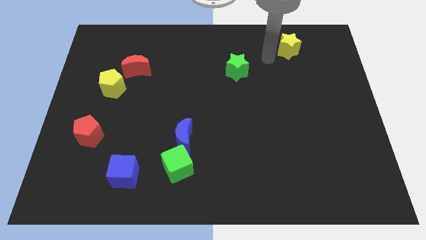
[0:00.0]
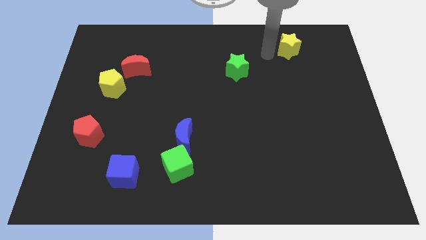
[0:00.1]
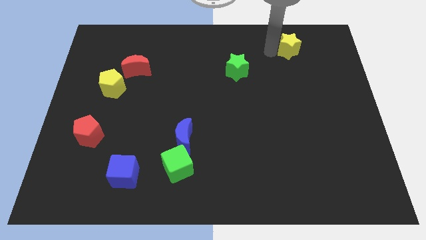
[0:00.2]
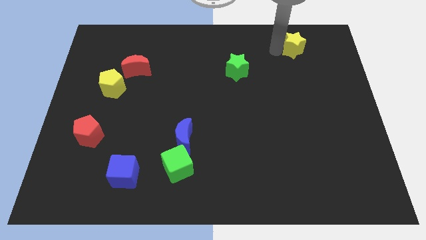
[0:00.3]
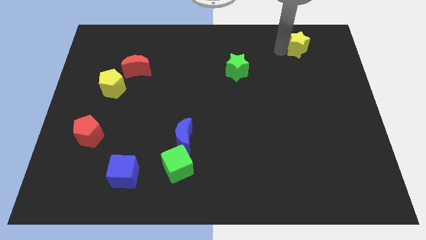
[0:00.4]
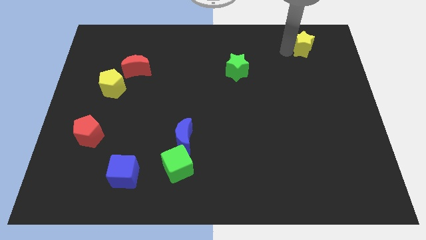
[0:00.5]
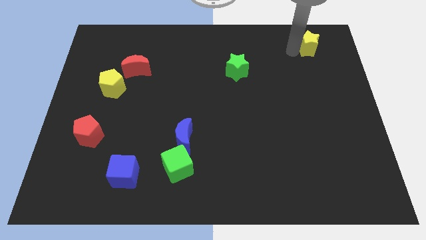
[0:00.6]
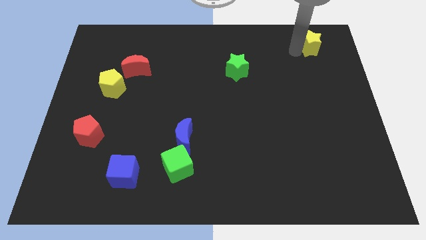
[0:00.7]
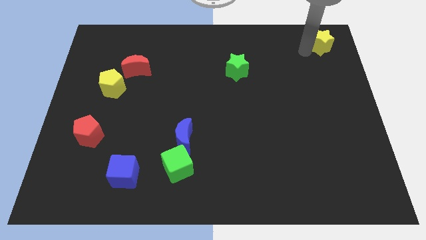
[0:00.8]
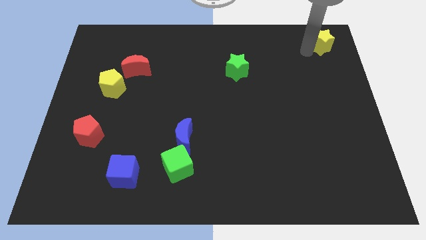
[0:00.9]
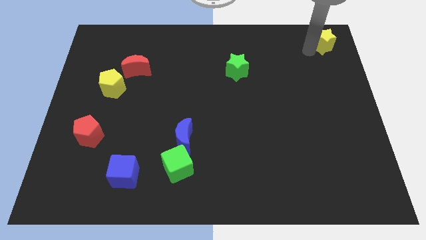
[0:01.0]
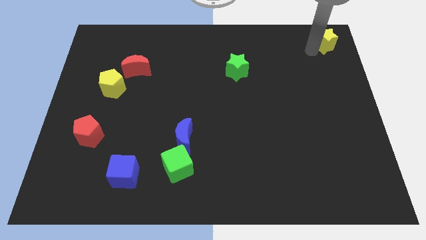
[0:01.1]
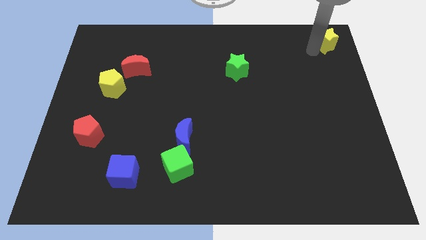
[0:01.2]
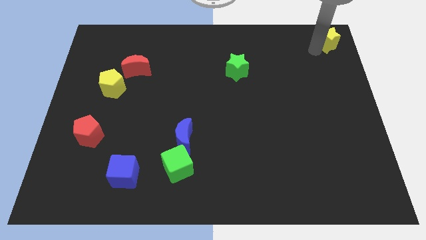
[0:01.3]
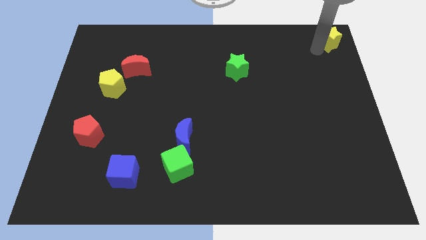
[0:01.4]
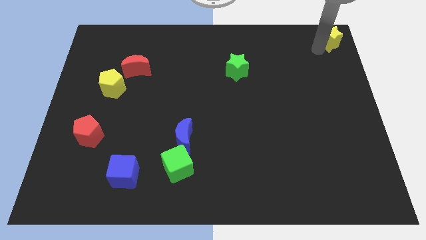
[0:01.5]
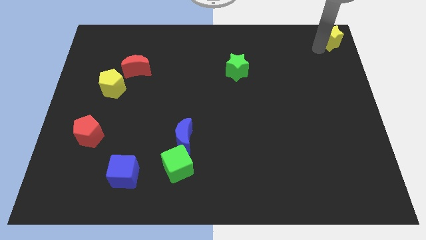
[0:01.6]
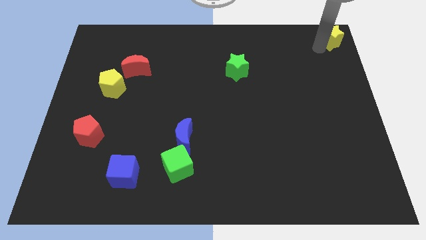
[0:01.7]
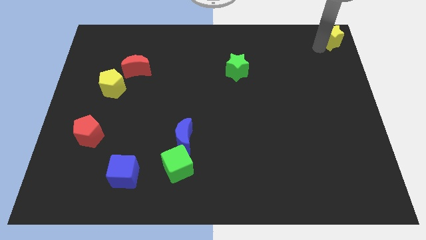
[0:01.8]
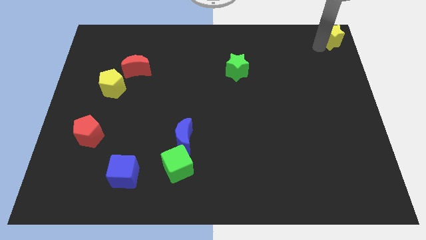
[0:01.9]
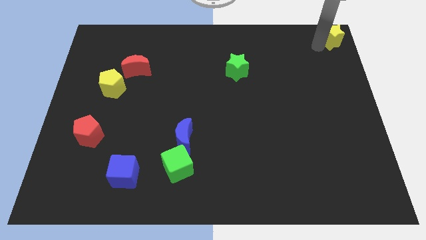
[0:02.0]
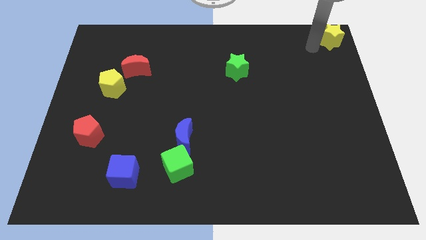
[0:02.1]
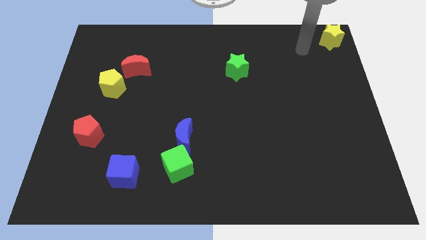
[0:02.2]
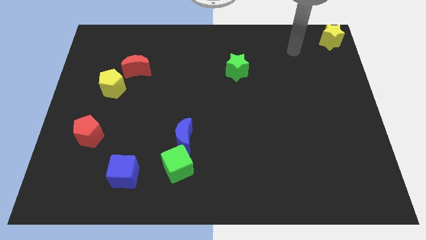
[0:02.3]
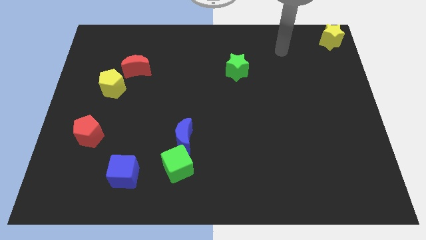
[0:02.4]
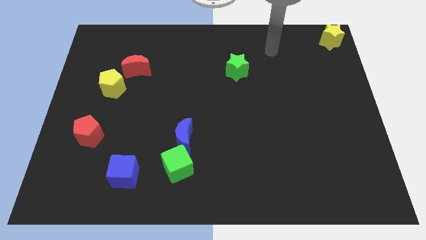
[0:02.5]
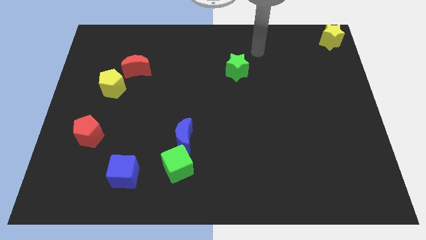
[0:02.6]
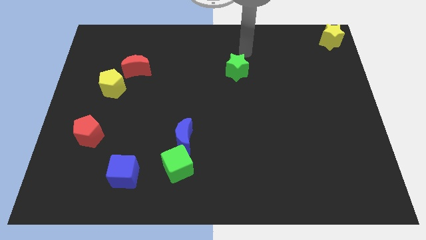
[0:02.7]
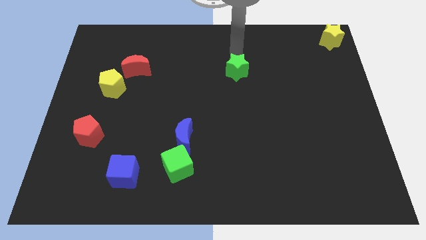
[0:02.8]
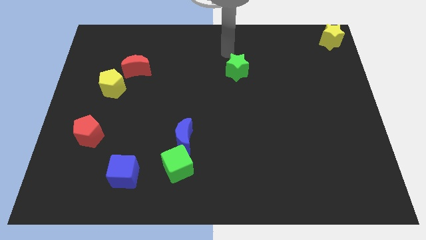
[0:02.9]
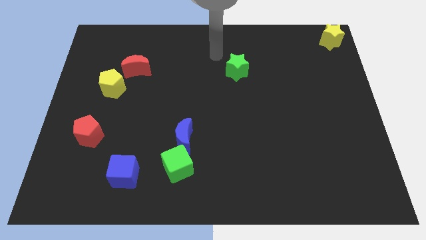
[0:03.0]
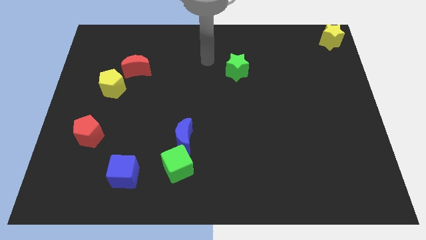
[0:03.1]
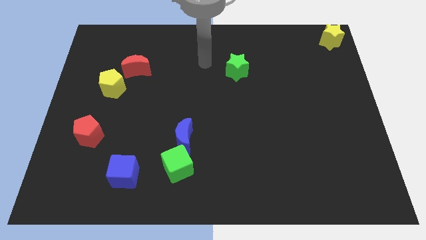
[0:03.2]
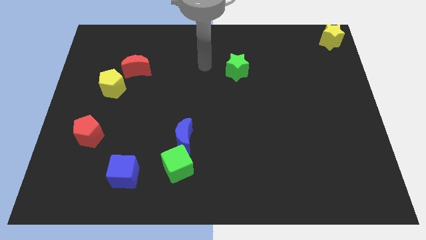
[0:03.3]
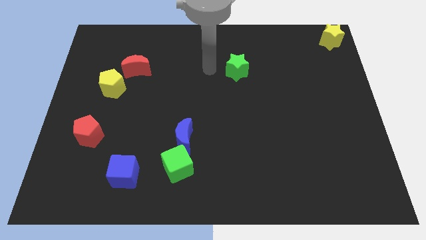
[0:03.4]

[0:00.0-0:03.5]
push the yellow star to the top right

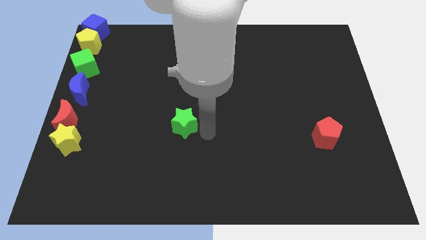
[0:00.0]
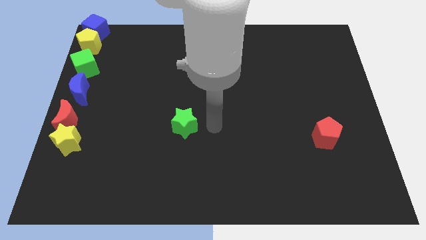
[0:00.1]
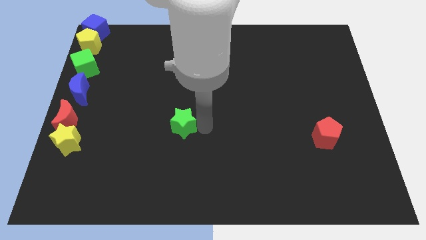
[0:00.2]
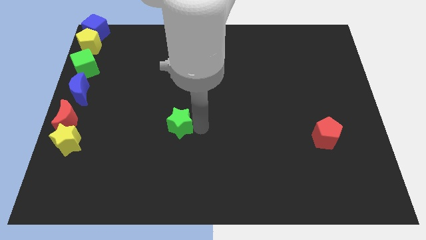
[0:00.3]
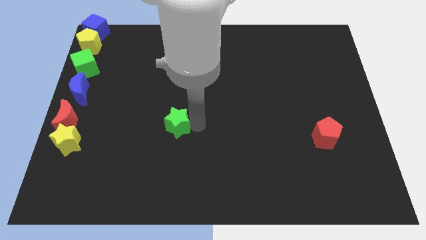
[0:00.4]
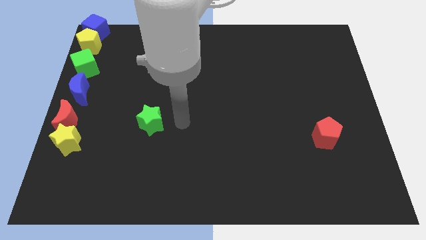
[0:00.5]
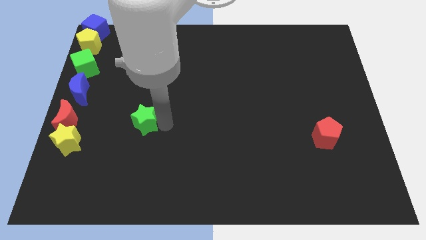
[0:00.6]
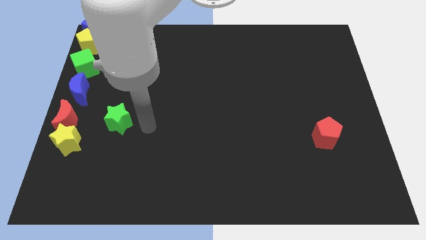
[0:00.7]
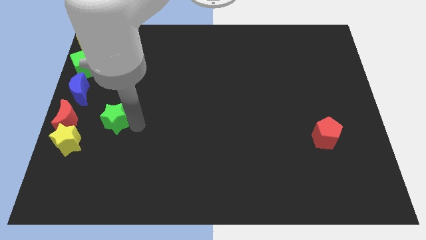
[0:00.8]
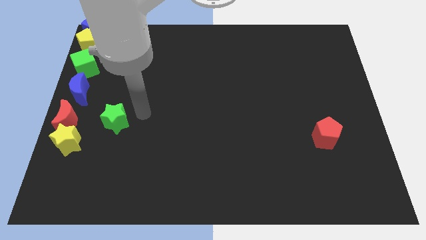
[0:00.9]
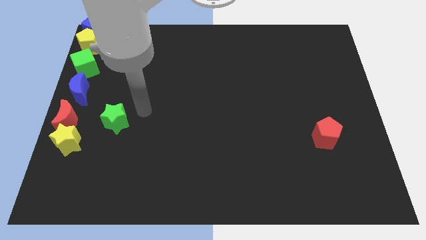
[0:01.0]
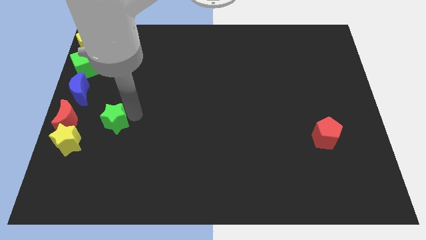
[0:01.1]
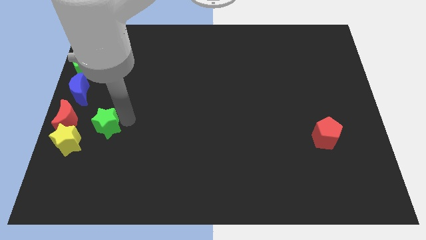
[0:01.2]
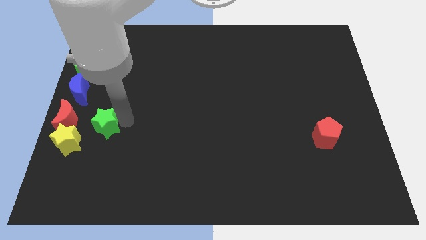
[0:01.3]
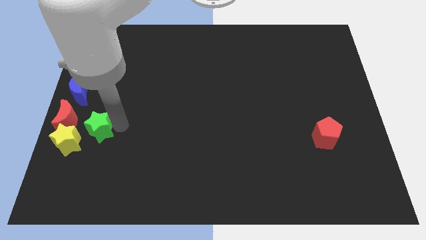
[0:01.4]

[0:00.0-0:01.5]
push the green star towards the red moon

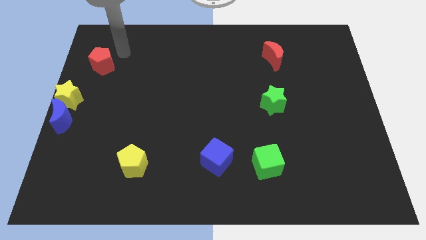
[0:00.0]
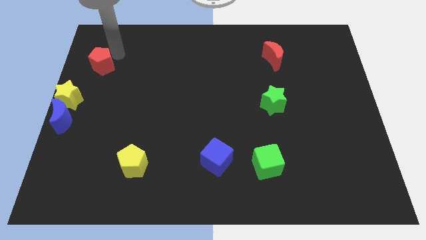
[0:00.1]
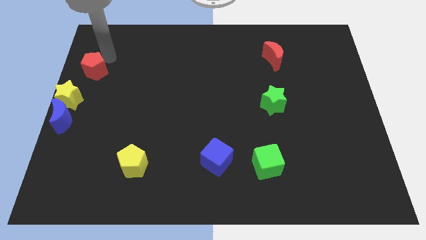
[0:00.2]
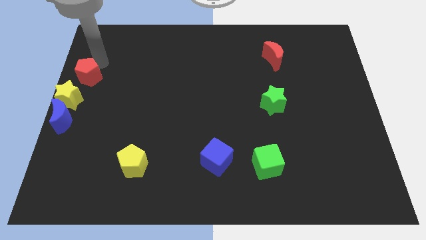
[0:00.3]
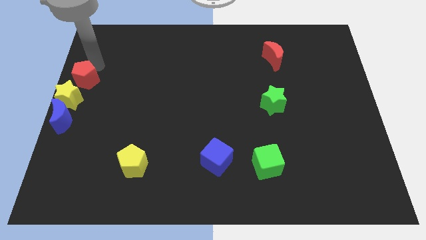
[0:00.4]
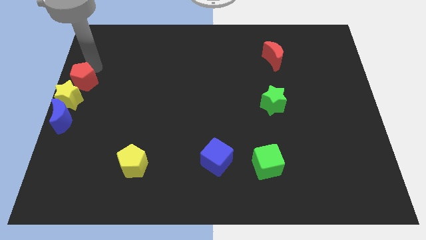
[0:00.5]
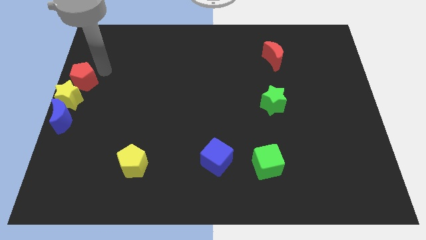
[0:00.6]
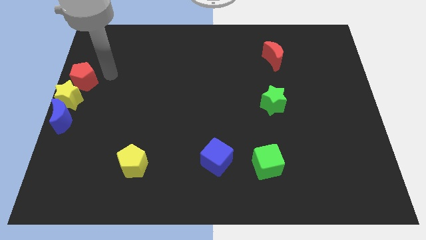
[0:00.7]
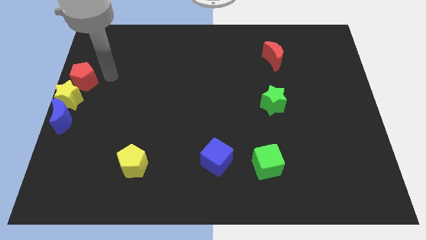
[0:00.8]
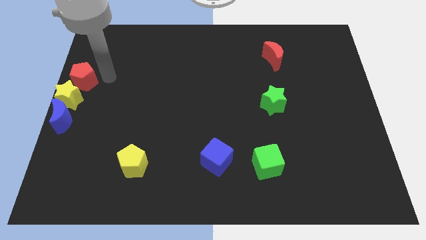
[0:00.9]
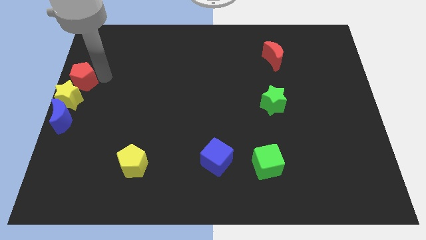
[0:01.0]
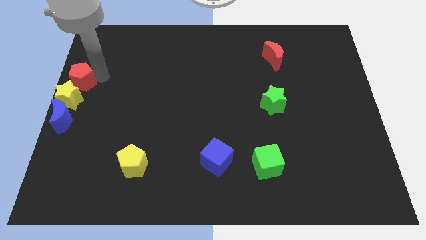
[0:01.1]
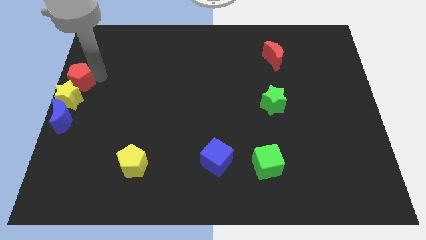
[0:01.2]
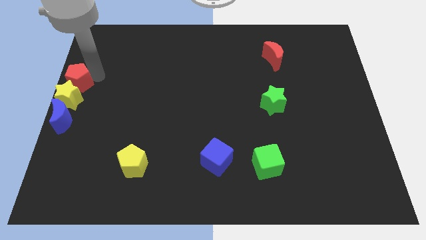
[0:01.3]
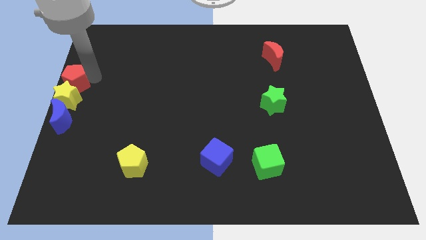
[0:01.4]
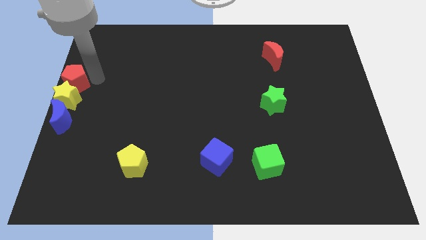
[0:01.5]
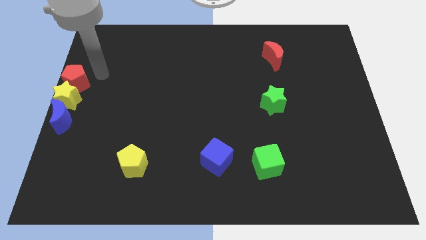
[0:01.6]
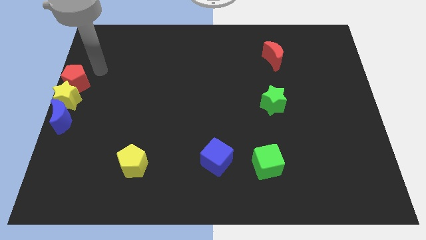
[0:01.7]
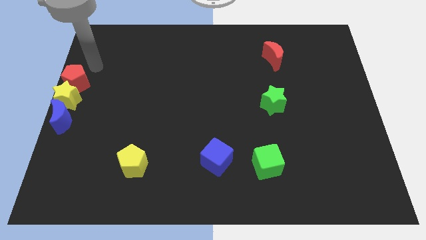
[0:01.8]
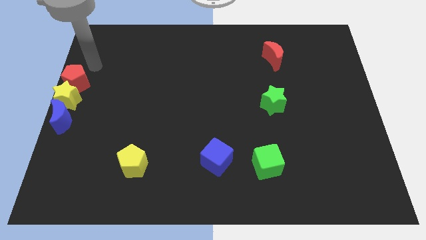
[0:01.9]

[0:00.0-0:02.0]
mover the red pentagon into the yellow star

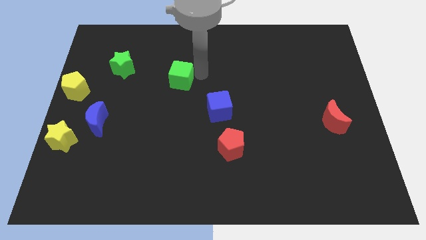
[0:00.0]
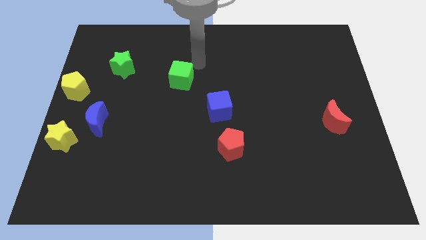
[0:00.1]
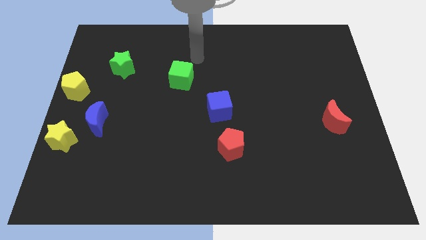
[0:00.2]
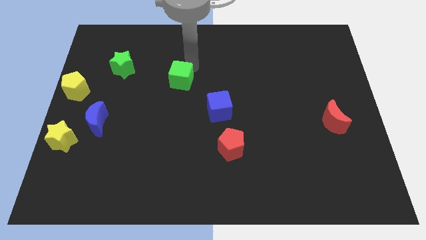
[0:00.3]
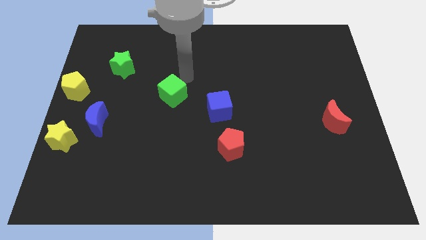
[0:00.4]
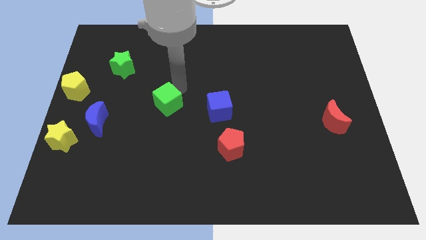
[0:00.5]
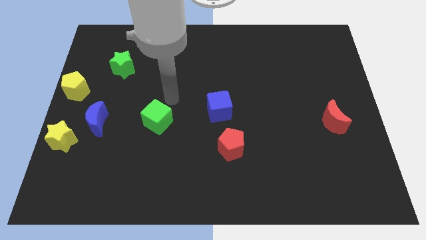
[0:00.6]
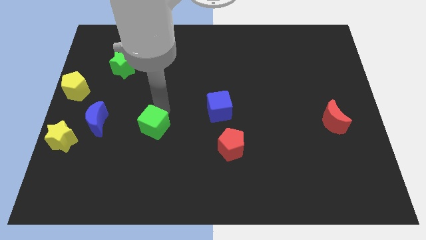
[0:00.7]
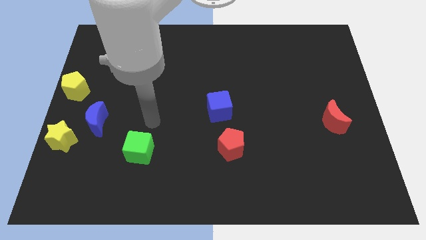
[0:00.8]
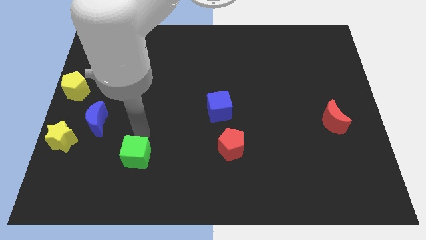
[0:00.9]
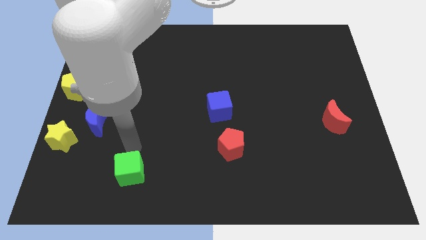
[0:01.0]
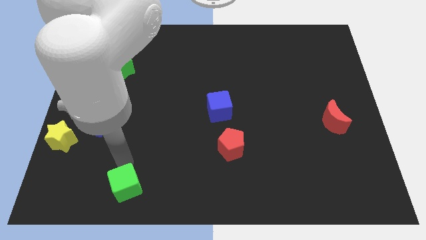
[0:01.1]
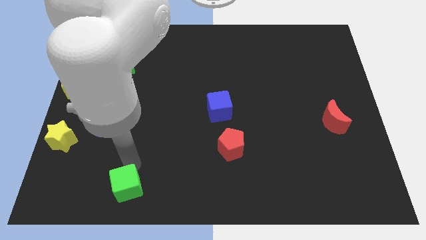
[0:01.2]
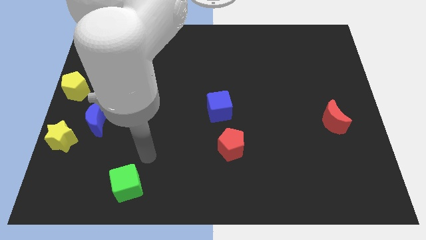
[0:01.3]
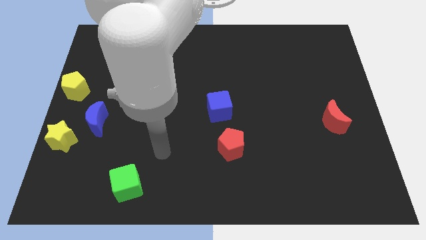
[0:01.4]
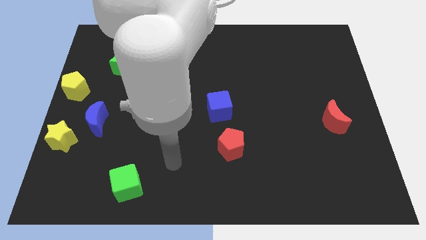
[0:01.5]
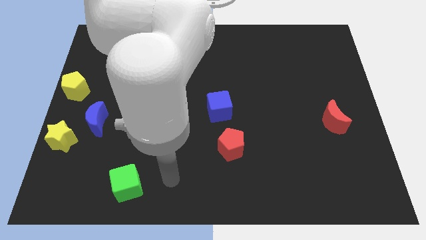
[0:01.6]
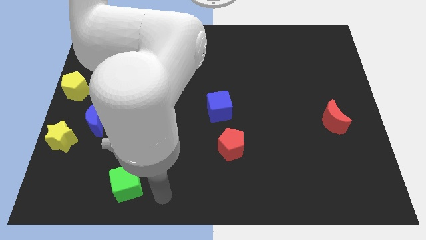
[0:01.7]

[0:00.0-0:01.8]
slide the green cube towards the bottom side of the board

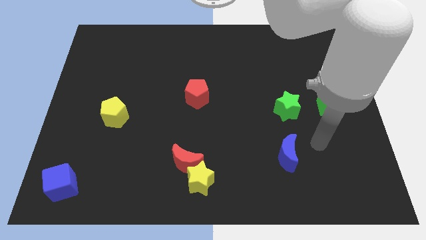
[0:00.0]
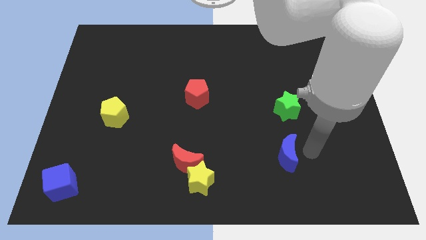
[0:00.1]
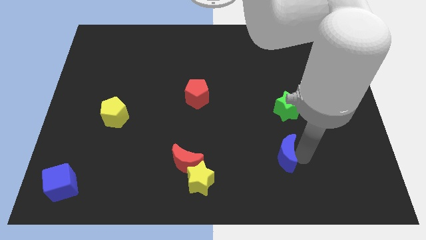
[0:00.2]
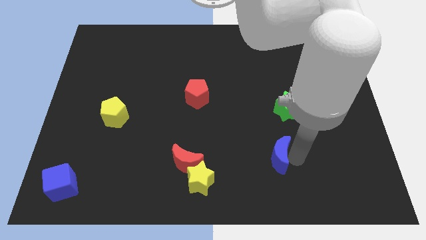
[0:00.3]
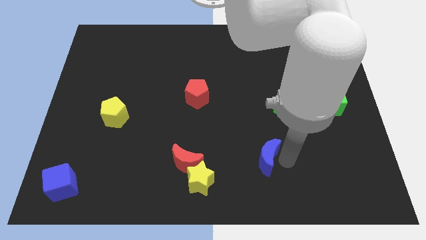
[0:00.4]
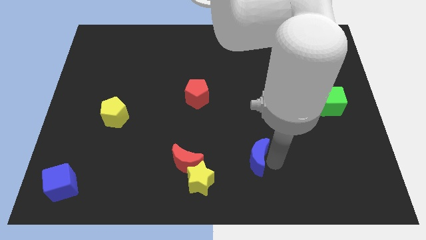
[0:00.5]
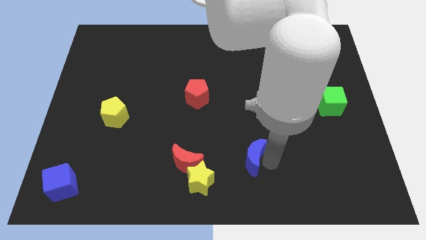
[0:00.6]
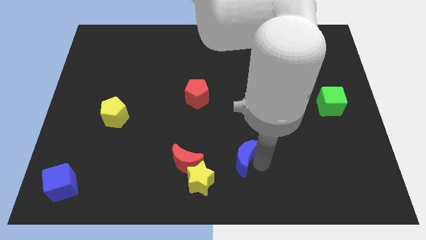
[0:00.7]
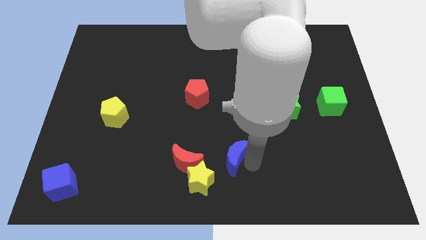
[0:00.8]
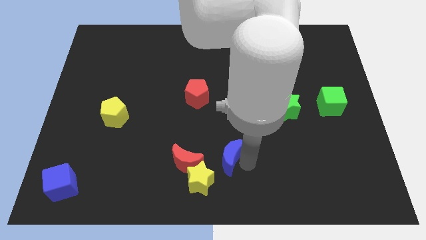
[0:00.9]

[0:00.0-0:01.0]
push the blue moon closer to the red moon
